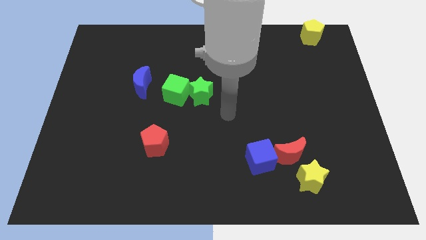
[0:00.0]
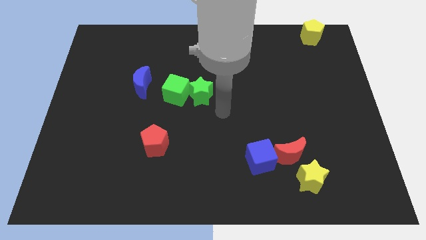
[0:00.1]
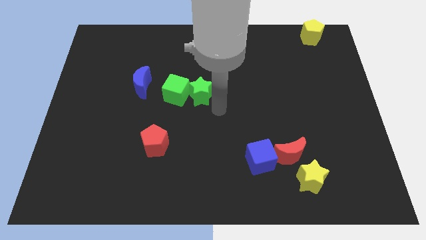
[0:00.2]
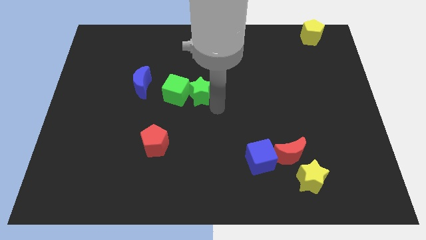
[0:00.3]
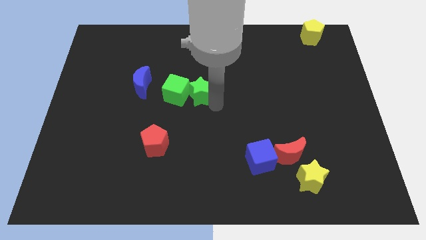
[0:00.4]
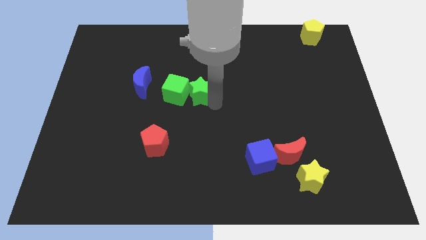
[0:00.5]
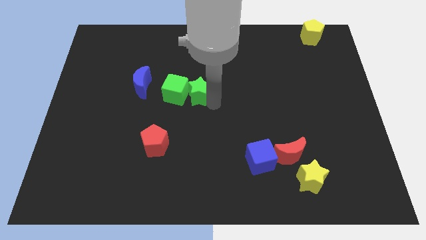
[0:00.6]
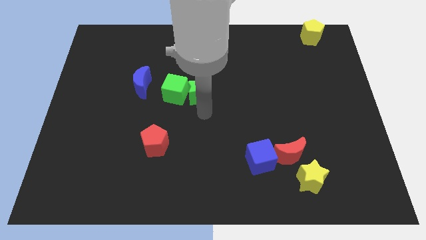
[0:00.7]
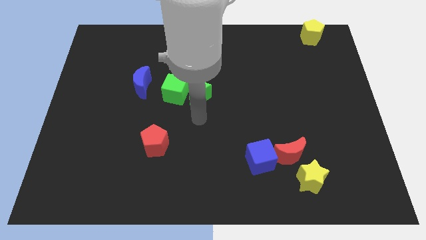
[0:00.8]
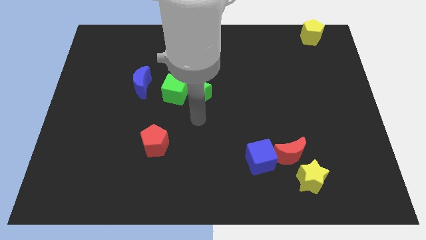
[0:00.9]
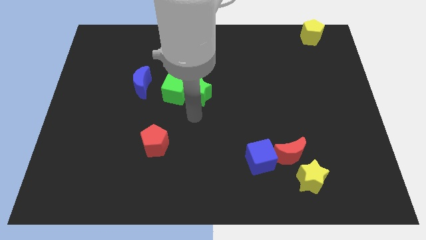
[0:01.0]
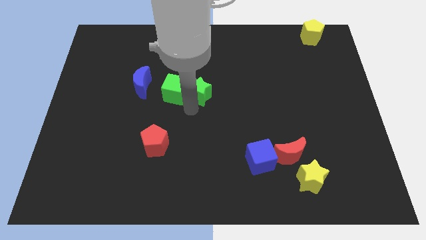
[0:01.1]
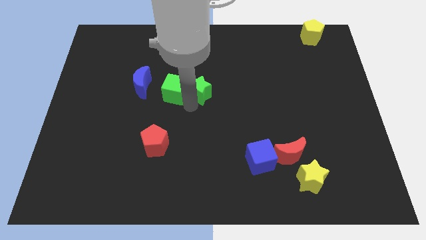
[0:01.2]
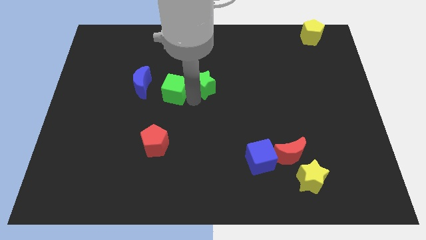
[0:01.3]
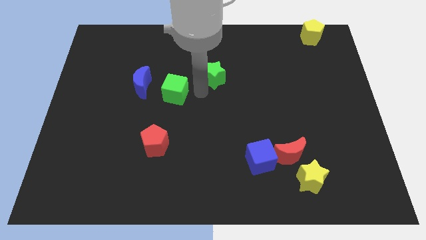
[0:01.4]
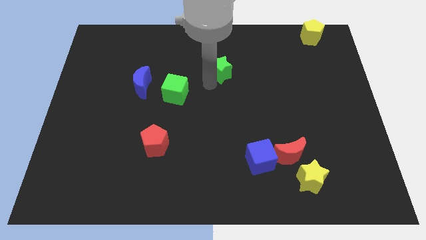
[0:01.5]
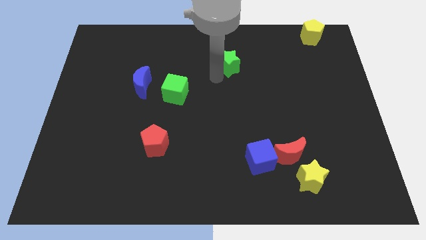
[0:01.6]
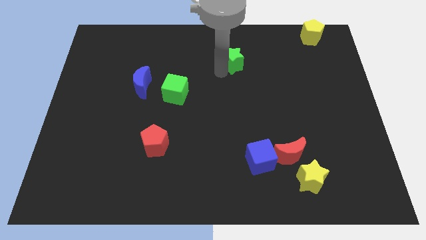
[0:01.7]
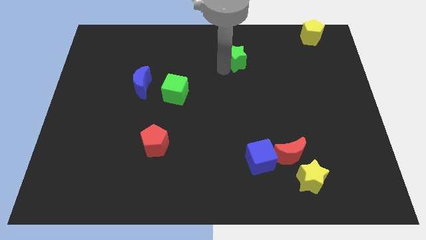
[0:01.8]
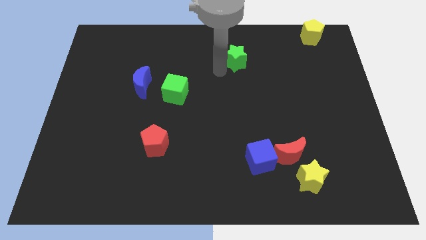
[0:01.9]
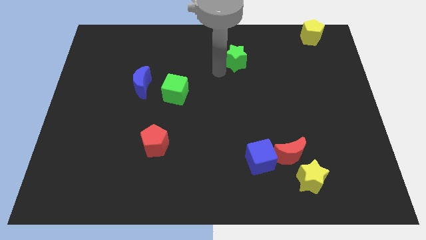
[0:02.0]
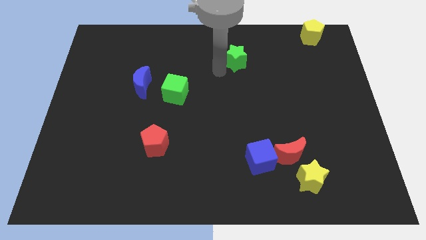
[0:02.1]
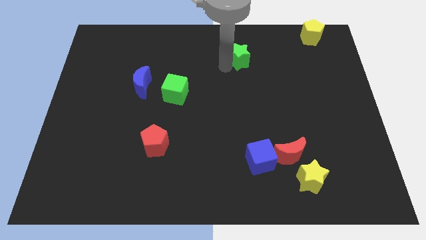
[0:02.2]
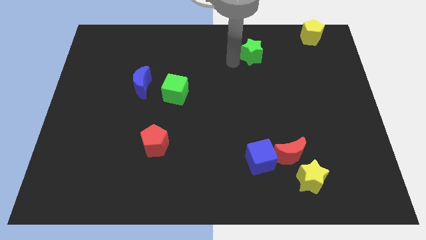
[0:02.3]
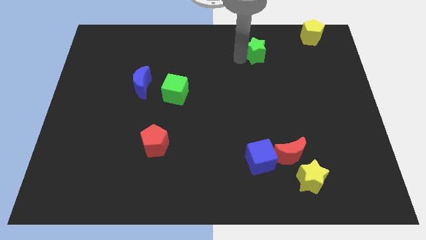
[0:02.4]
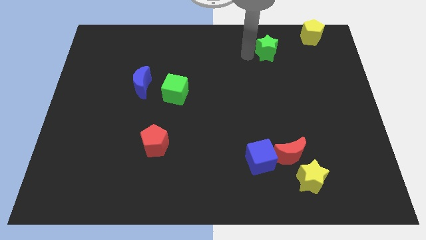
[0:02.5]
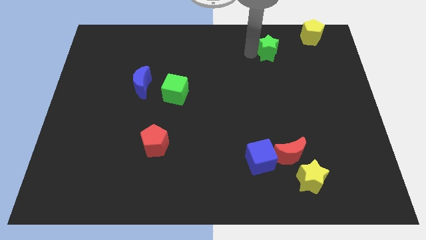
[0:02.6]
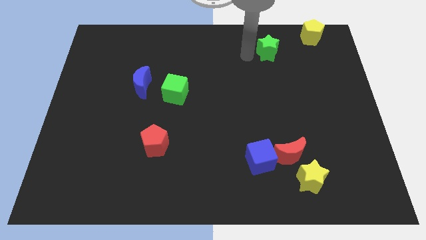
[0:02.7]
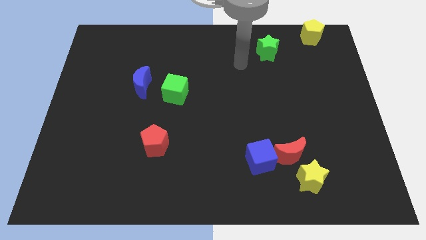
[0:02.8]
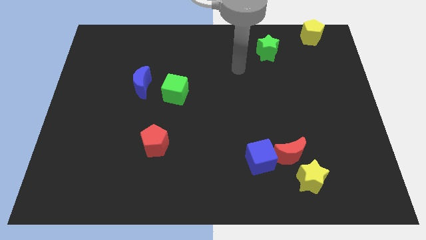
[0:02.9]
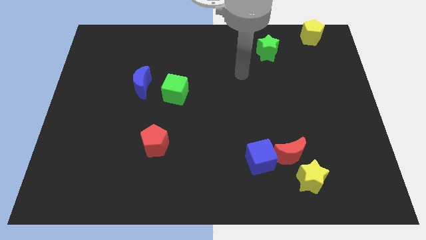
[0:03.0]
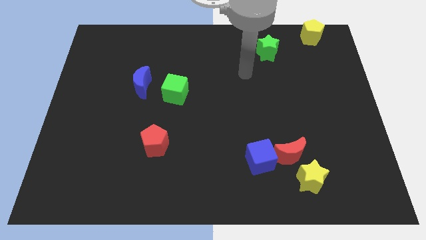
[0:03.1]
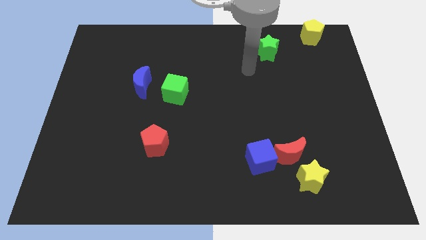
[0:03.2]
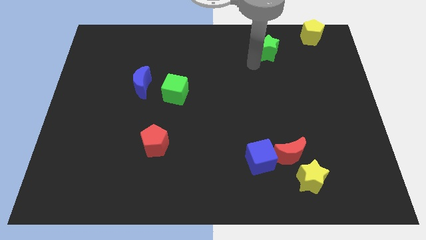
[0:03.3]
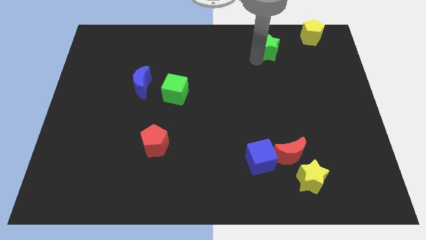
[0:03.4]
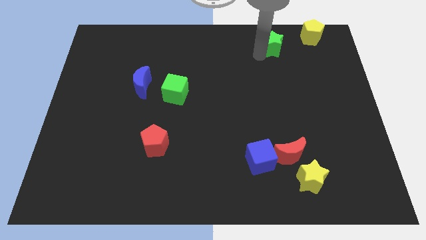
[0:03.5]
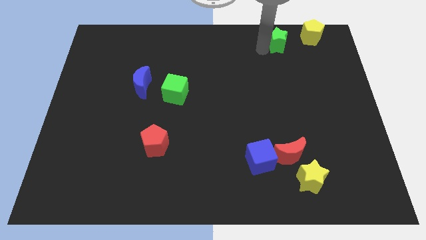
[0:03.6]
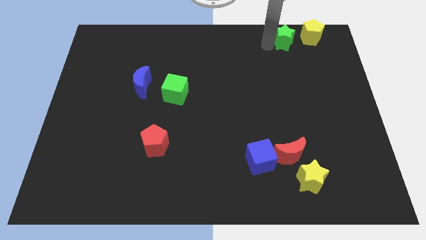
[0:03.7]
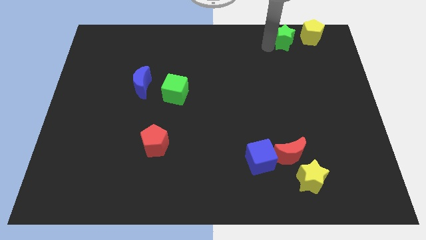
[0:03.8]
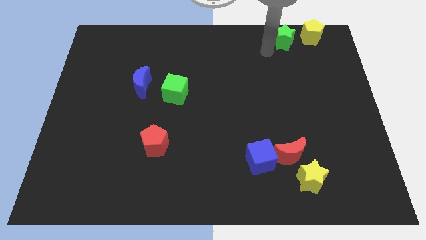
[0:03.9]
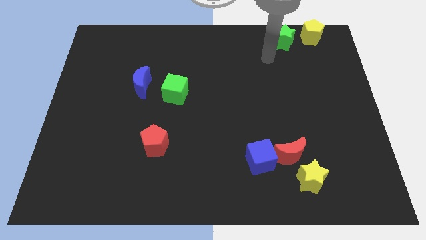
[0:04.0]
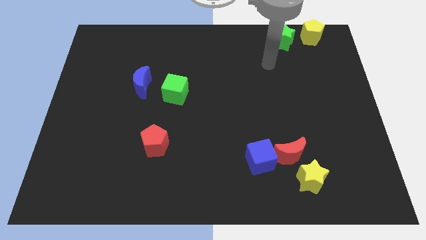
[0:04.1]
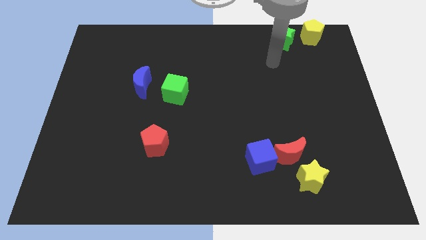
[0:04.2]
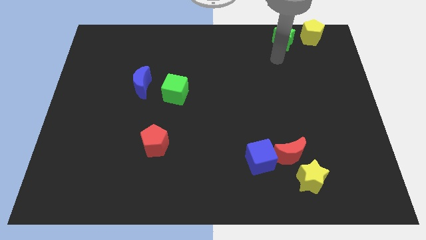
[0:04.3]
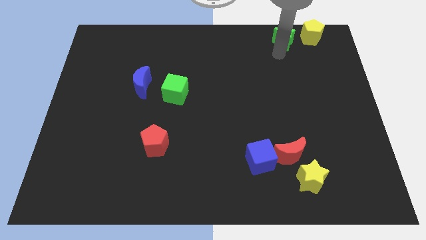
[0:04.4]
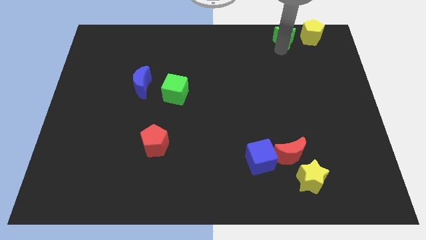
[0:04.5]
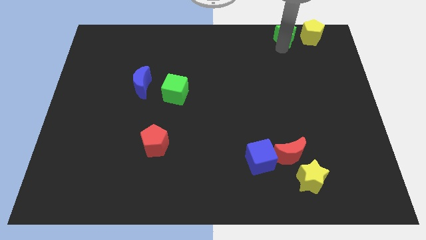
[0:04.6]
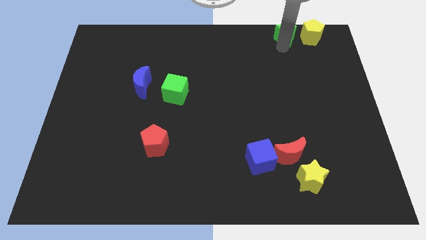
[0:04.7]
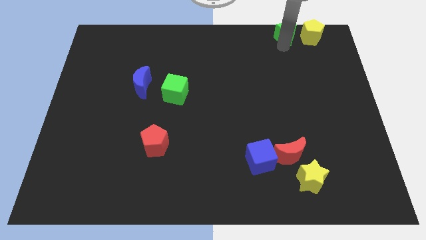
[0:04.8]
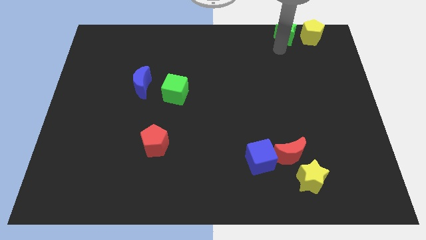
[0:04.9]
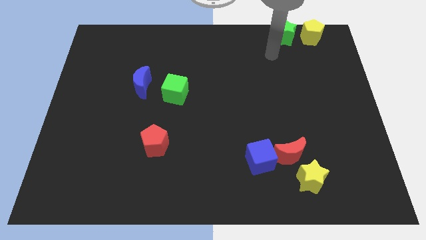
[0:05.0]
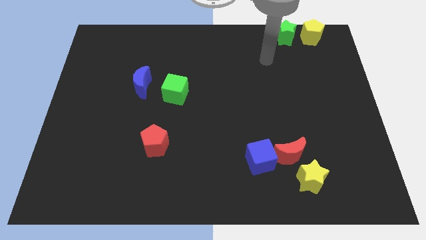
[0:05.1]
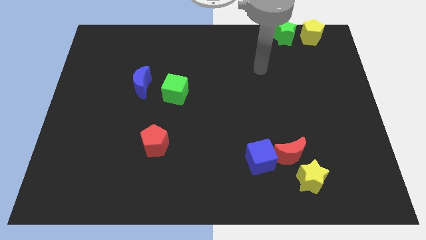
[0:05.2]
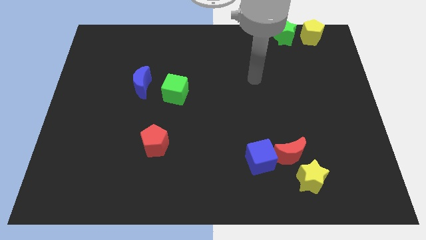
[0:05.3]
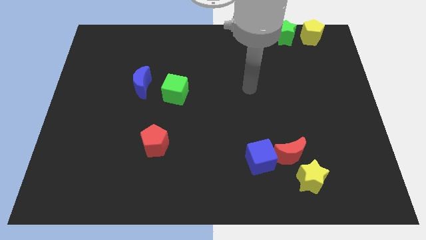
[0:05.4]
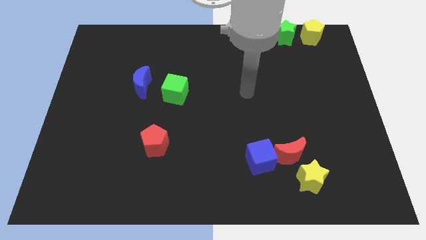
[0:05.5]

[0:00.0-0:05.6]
push the green star to the left side of the yellow pentagon

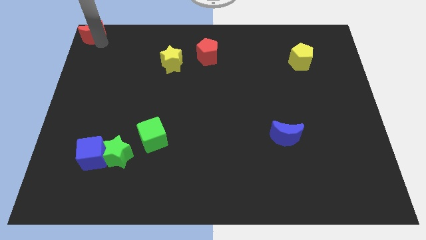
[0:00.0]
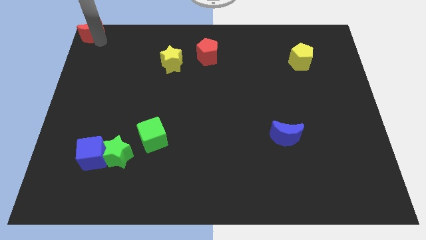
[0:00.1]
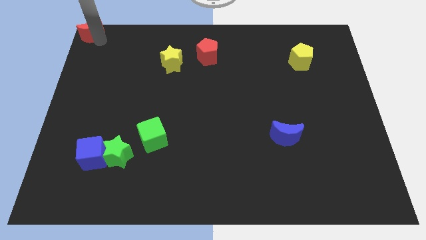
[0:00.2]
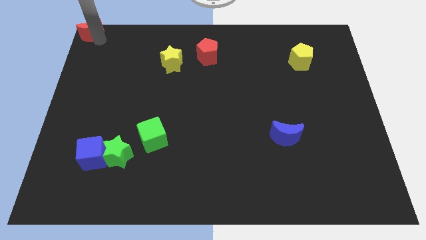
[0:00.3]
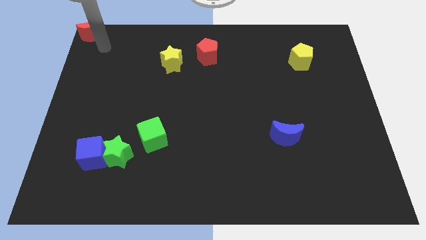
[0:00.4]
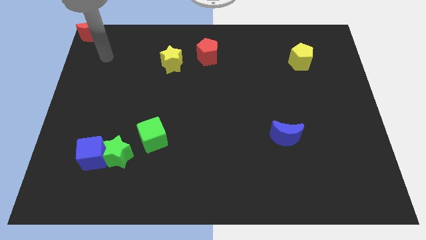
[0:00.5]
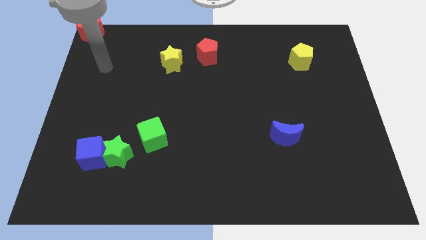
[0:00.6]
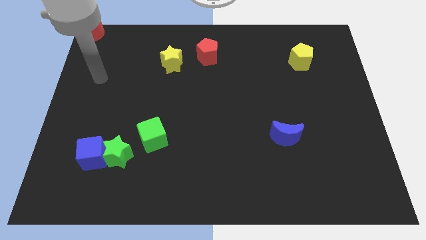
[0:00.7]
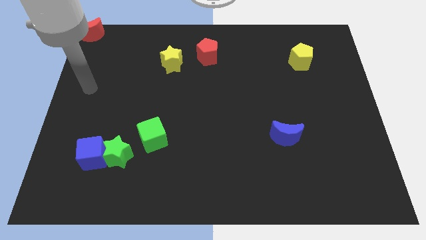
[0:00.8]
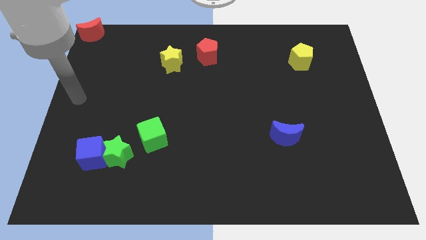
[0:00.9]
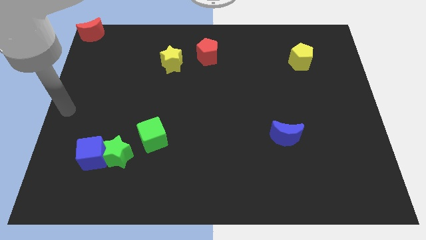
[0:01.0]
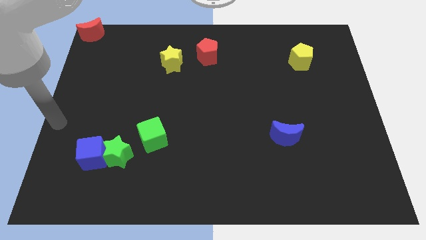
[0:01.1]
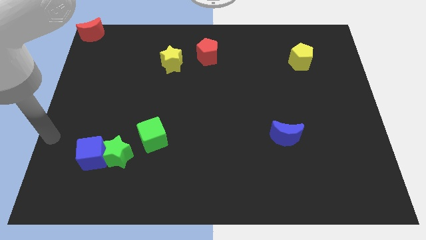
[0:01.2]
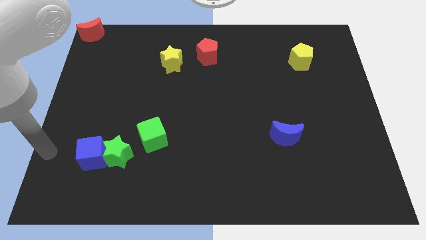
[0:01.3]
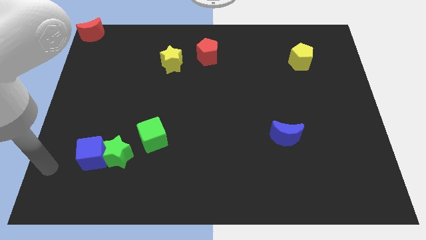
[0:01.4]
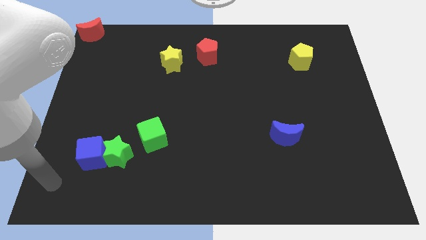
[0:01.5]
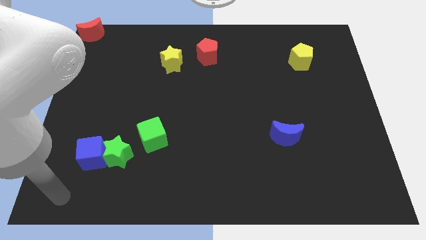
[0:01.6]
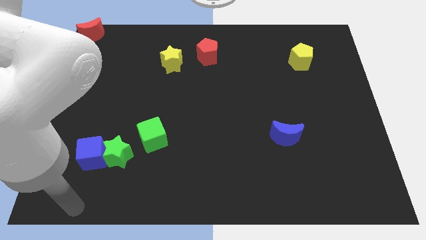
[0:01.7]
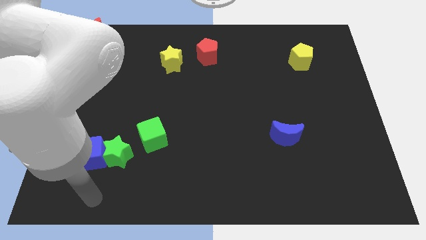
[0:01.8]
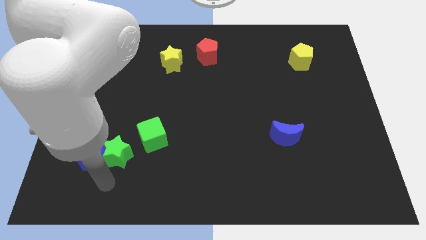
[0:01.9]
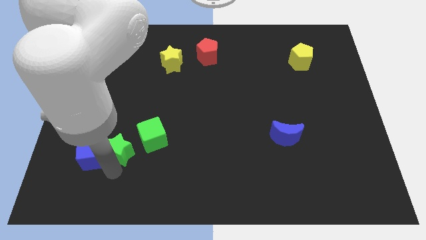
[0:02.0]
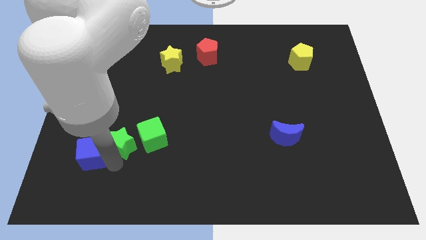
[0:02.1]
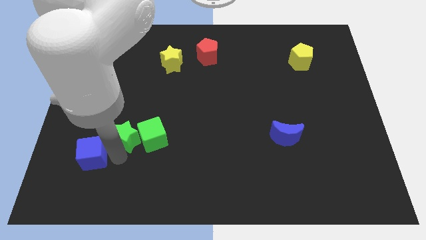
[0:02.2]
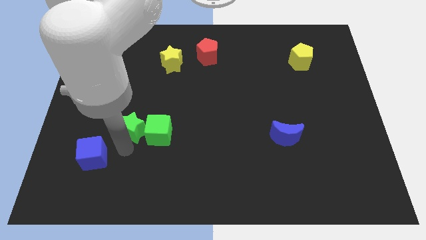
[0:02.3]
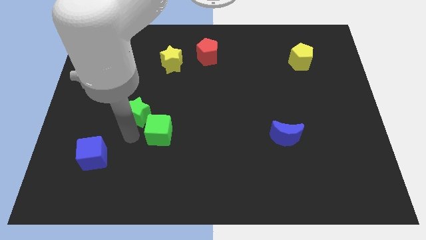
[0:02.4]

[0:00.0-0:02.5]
move the green star slightly towards the top center of the board

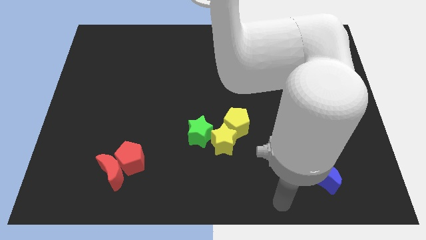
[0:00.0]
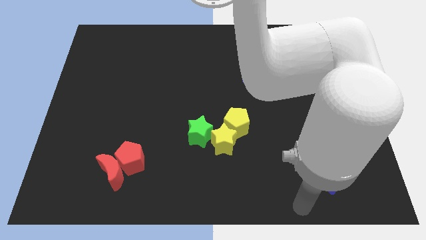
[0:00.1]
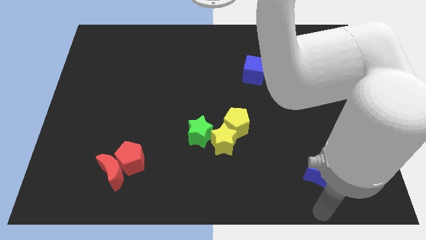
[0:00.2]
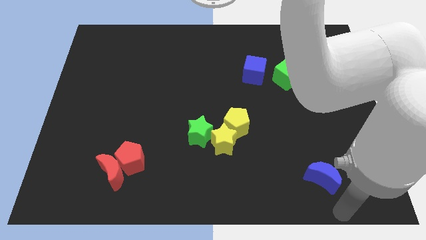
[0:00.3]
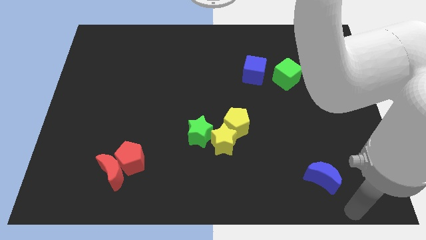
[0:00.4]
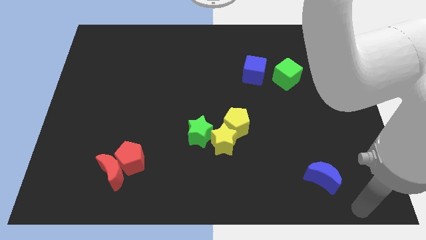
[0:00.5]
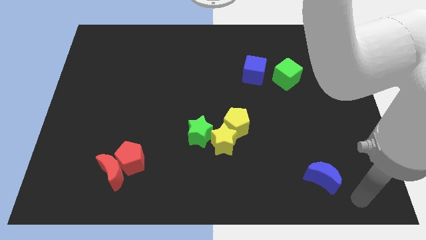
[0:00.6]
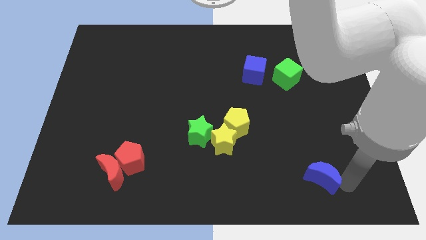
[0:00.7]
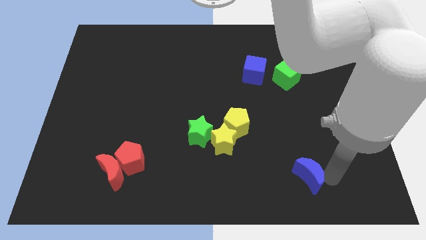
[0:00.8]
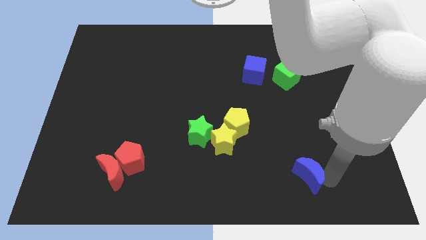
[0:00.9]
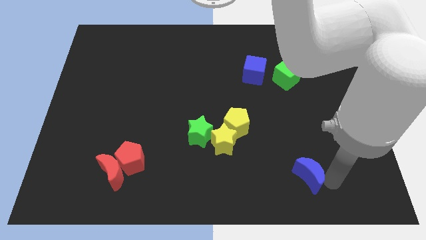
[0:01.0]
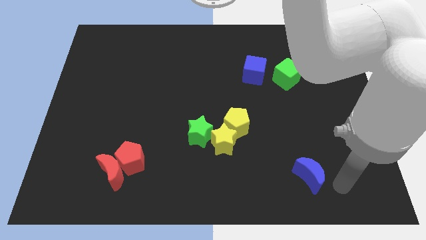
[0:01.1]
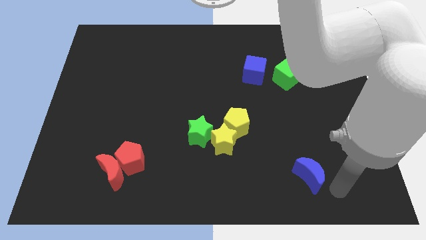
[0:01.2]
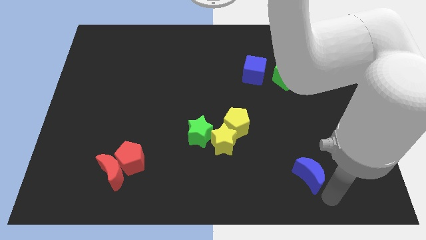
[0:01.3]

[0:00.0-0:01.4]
move the arm towards the bottom of the blue crescent
